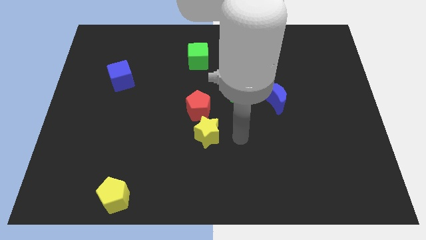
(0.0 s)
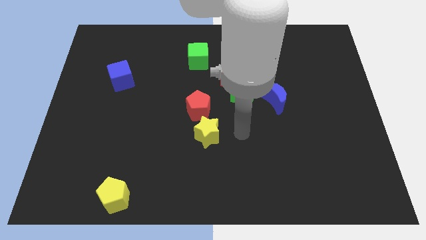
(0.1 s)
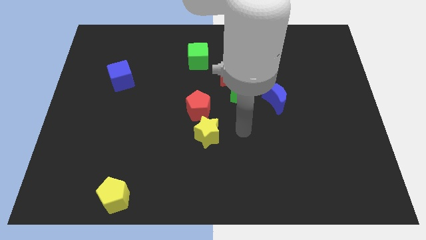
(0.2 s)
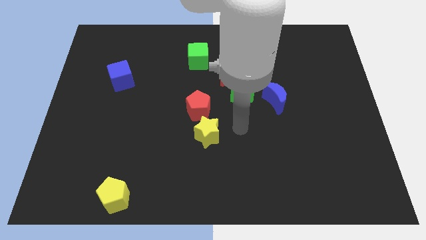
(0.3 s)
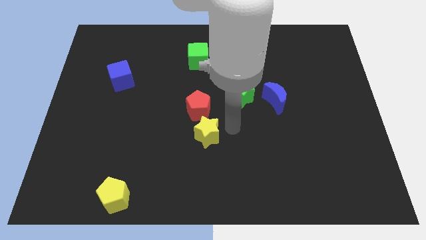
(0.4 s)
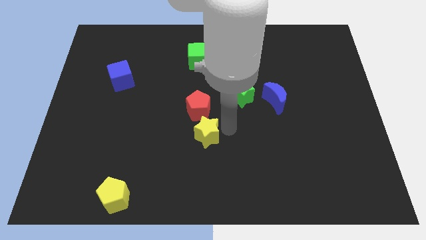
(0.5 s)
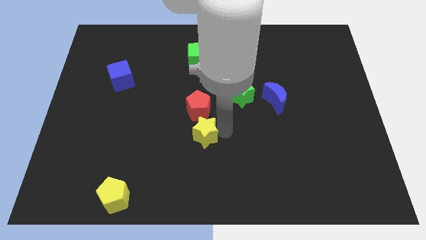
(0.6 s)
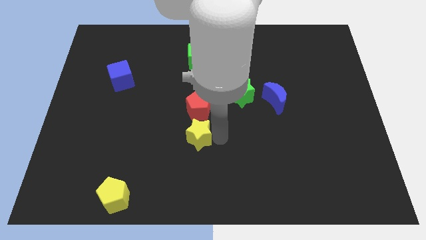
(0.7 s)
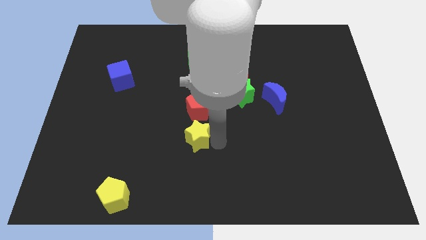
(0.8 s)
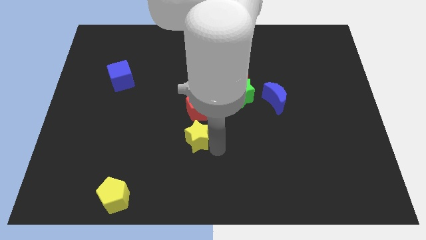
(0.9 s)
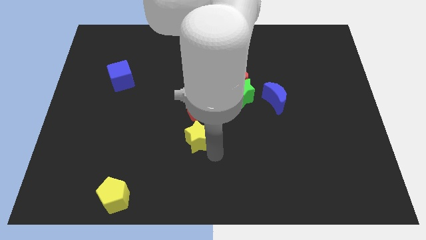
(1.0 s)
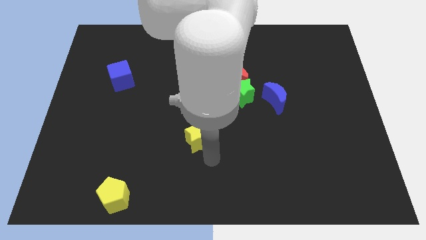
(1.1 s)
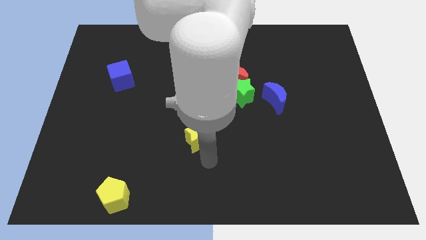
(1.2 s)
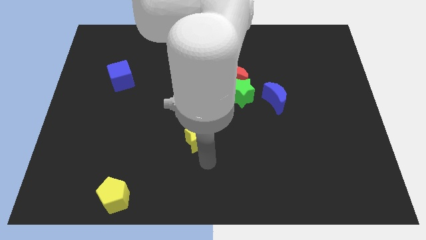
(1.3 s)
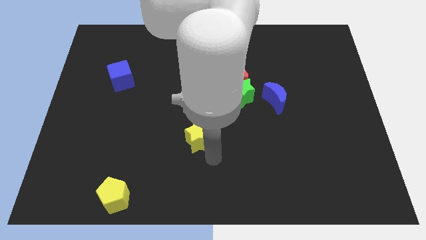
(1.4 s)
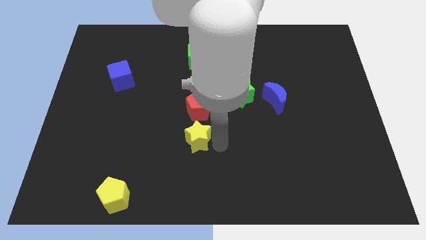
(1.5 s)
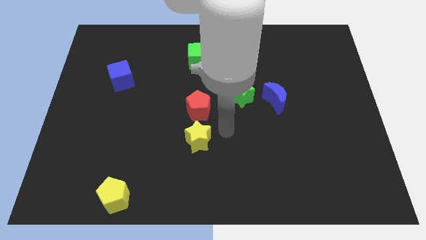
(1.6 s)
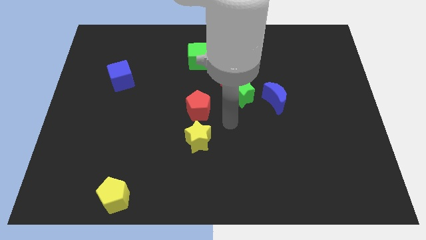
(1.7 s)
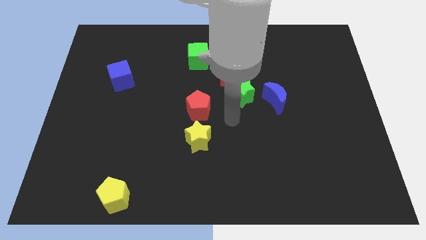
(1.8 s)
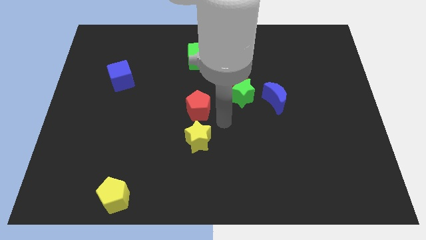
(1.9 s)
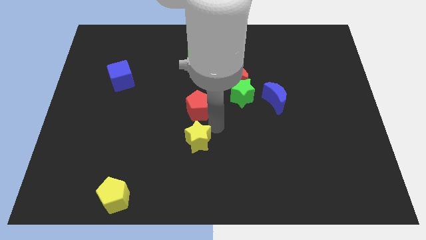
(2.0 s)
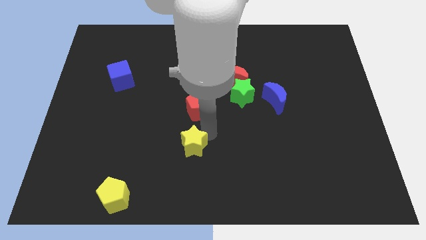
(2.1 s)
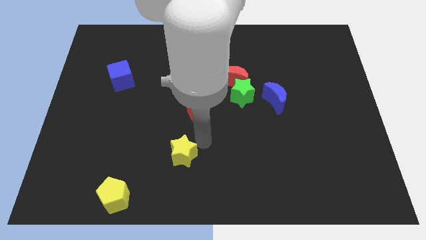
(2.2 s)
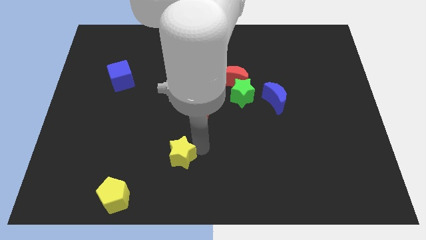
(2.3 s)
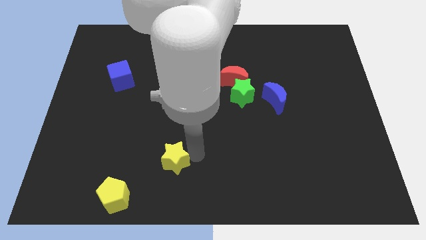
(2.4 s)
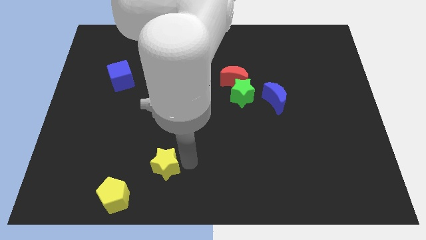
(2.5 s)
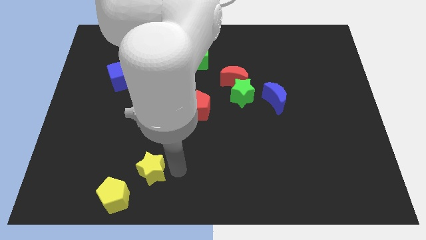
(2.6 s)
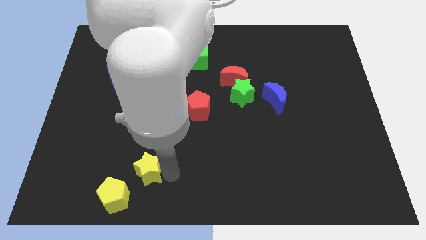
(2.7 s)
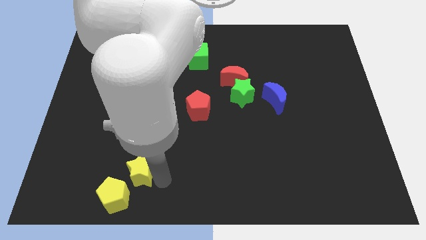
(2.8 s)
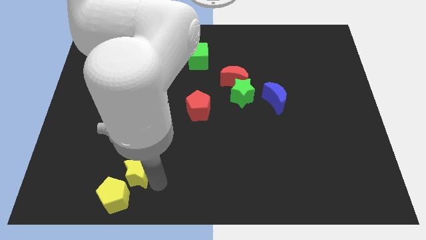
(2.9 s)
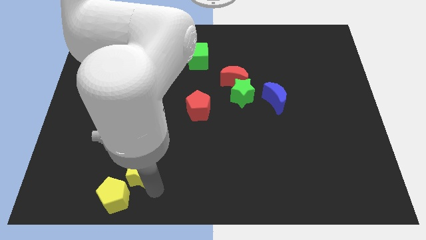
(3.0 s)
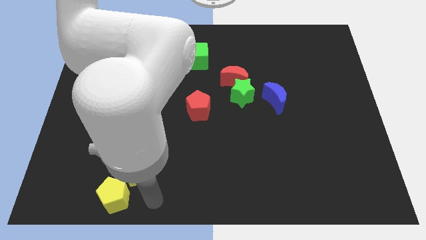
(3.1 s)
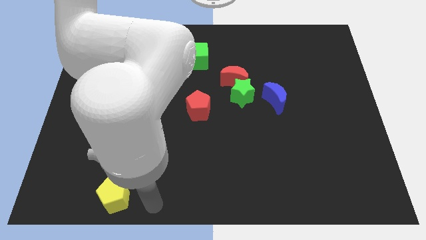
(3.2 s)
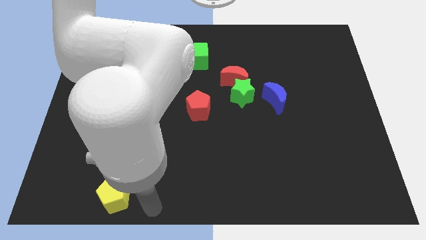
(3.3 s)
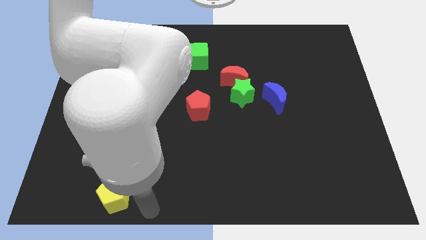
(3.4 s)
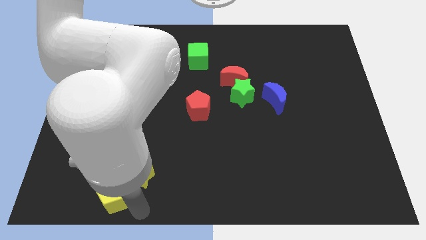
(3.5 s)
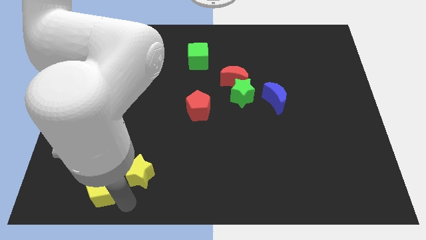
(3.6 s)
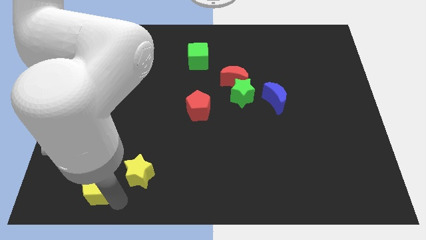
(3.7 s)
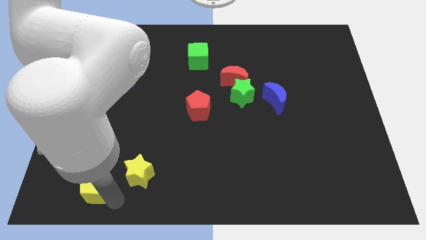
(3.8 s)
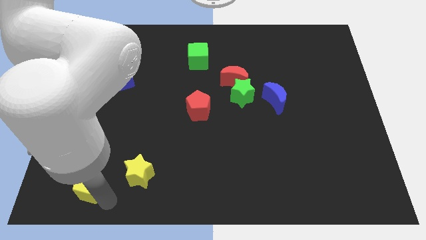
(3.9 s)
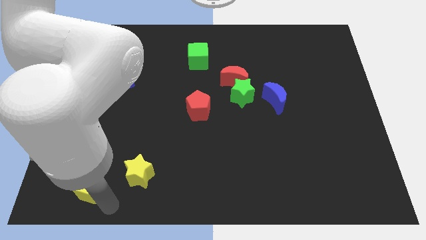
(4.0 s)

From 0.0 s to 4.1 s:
move the yellow star diagonally to the red pentagon

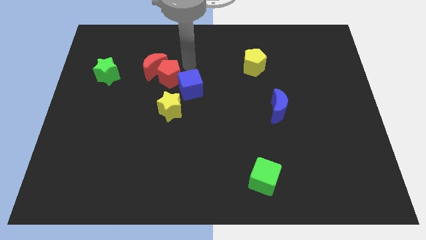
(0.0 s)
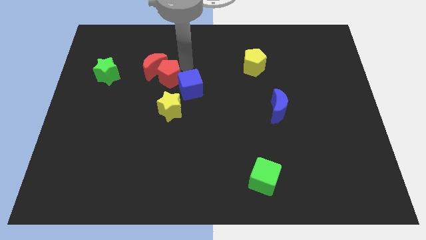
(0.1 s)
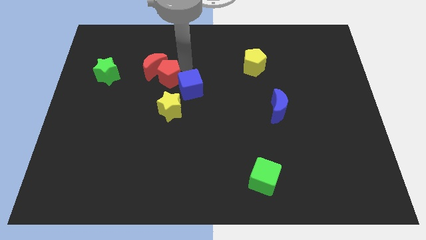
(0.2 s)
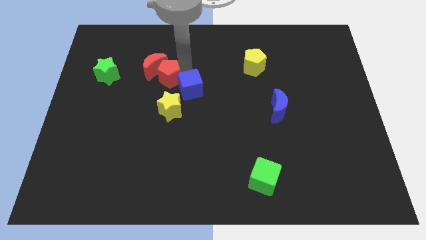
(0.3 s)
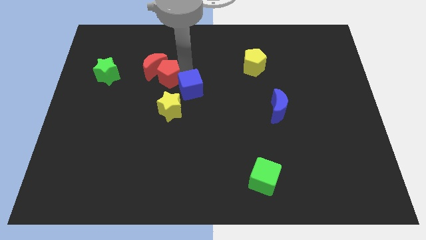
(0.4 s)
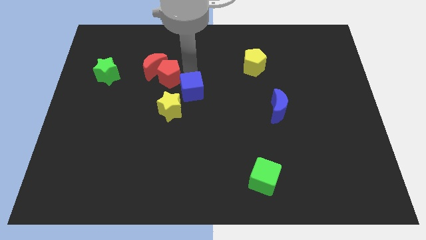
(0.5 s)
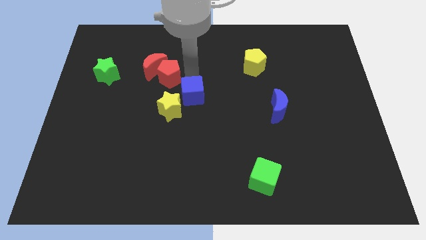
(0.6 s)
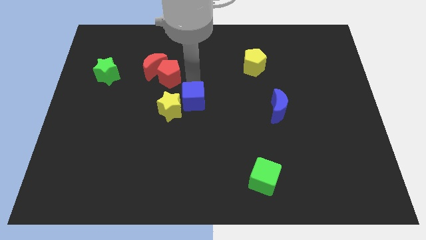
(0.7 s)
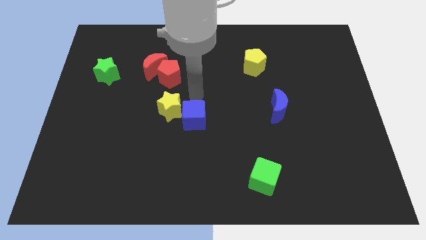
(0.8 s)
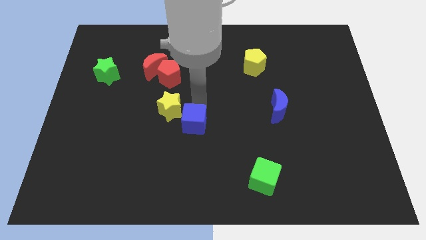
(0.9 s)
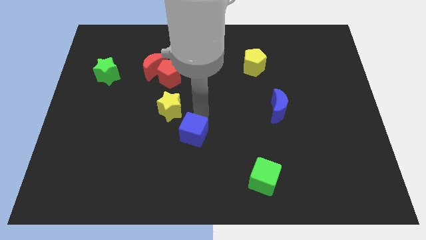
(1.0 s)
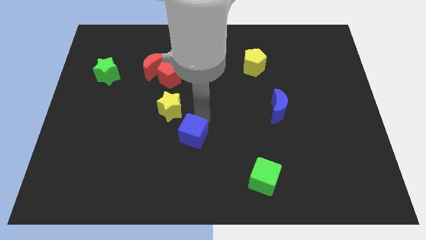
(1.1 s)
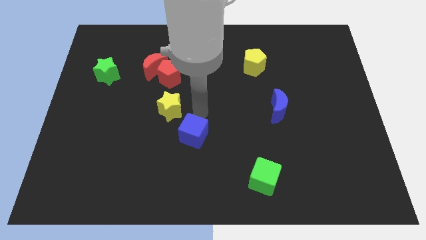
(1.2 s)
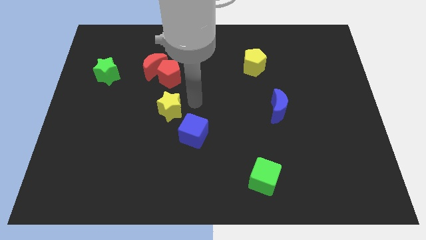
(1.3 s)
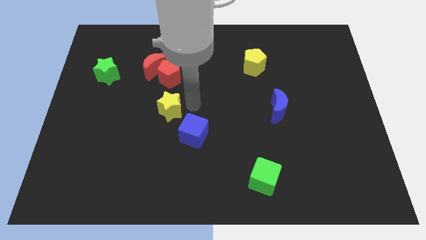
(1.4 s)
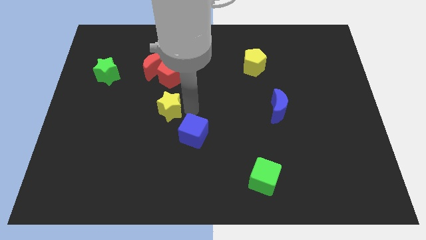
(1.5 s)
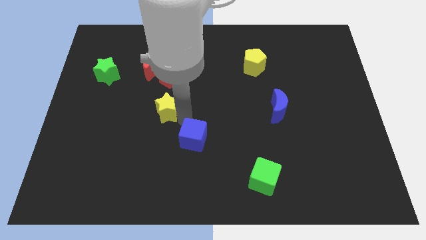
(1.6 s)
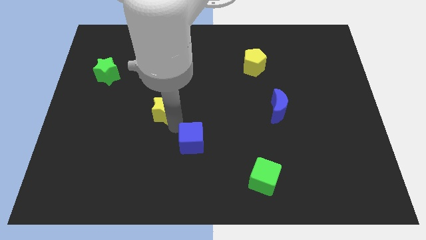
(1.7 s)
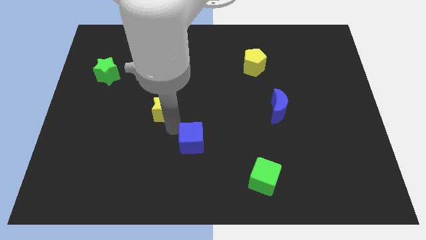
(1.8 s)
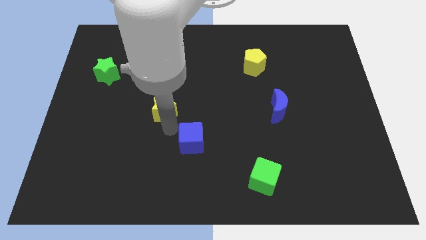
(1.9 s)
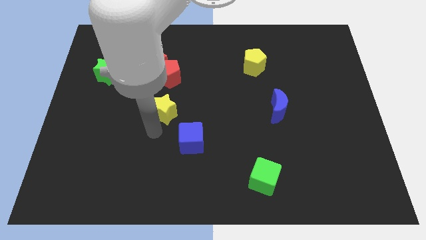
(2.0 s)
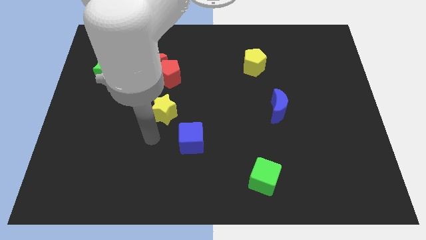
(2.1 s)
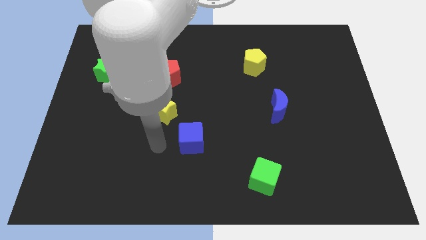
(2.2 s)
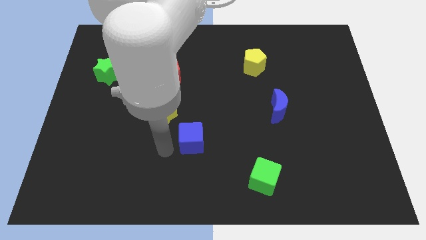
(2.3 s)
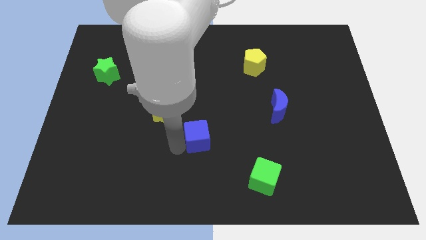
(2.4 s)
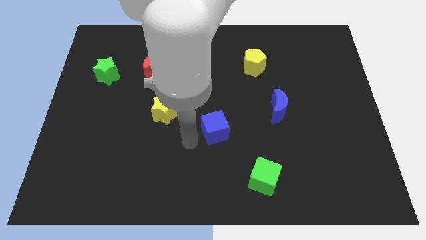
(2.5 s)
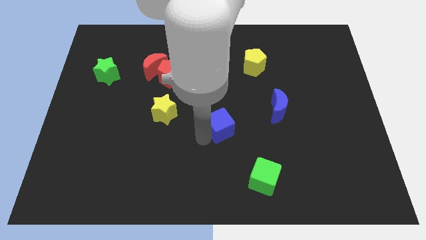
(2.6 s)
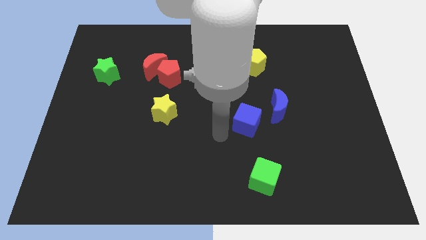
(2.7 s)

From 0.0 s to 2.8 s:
place the blue cube diagonal to the green cube

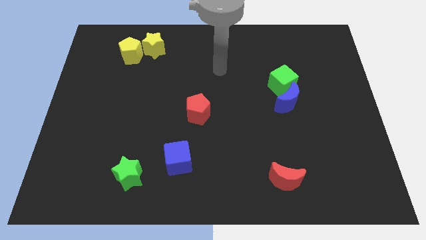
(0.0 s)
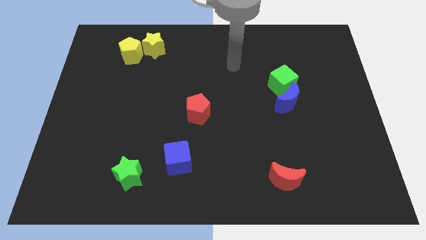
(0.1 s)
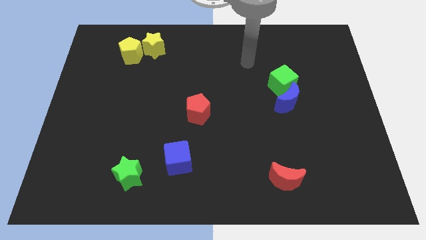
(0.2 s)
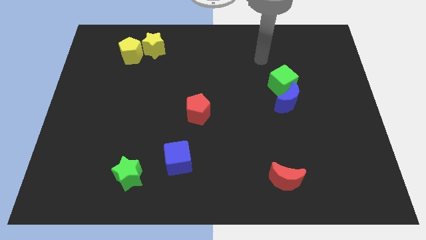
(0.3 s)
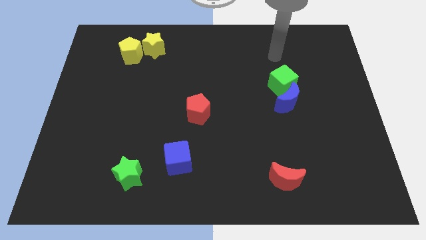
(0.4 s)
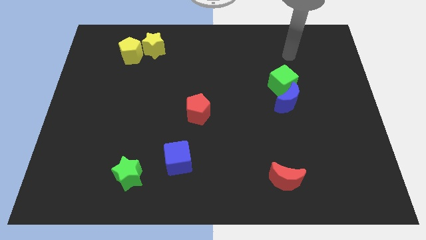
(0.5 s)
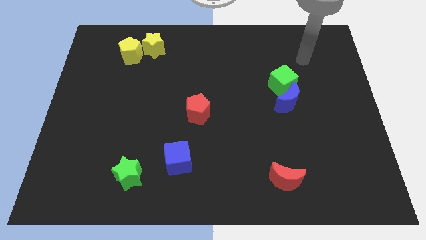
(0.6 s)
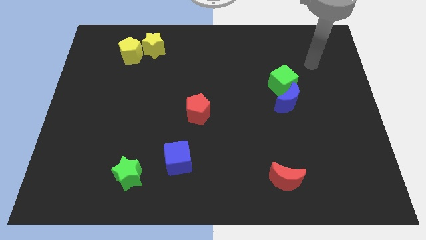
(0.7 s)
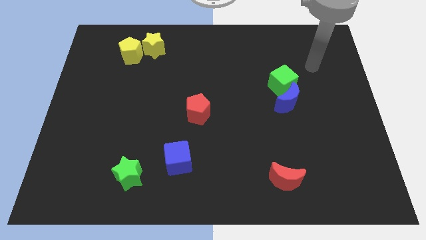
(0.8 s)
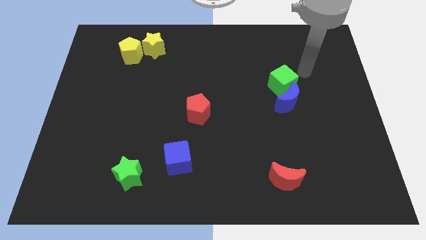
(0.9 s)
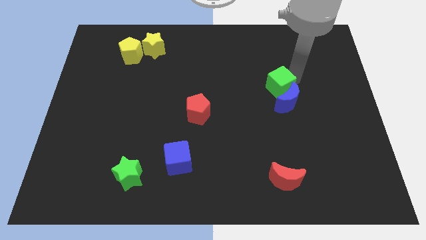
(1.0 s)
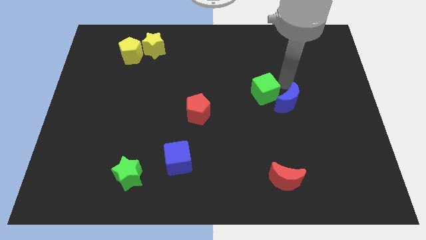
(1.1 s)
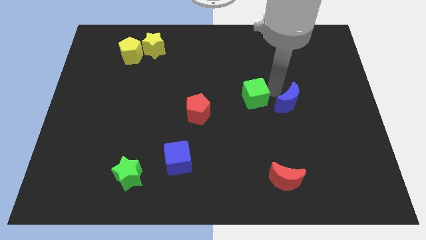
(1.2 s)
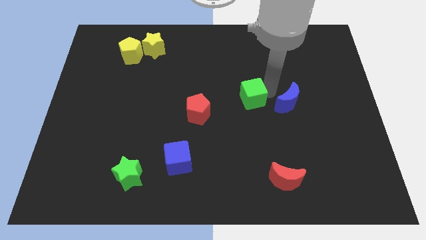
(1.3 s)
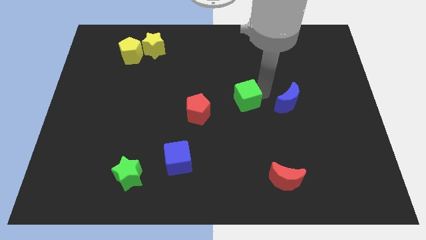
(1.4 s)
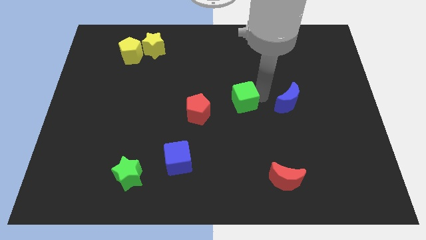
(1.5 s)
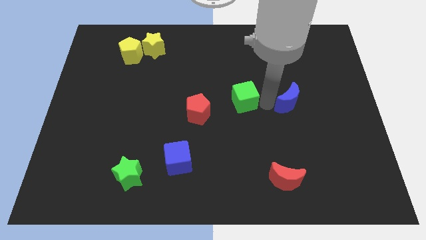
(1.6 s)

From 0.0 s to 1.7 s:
separate the green cube from the blue crescent

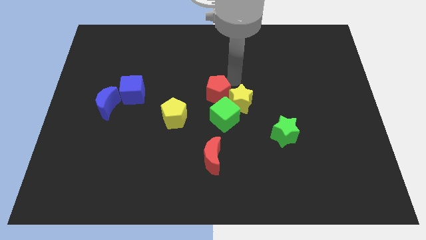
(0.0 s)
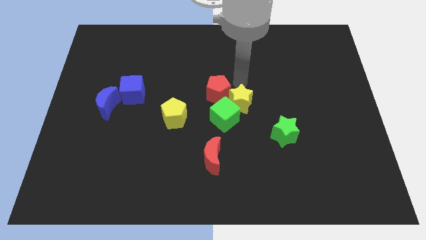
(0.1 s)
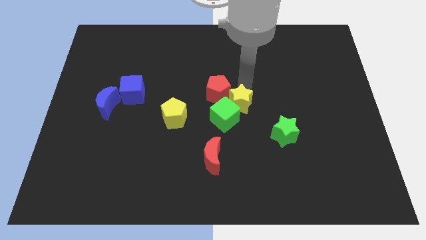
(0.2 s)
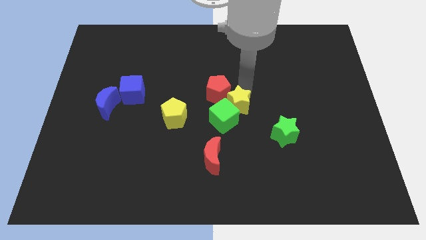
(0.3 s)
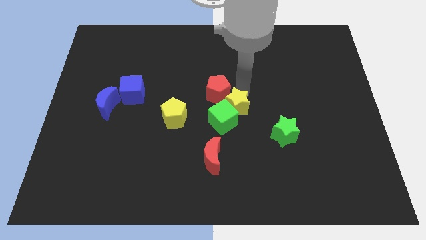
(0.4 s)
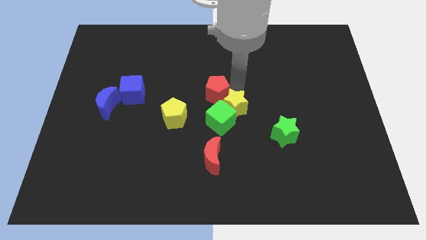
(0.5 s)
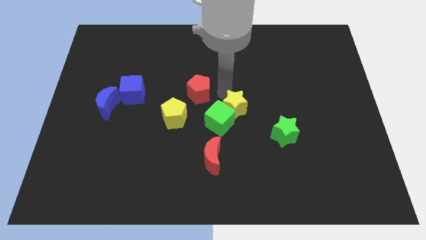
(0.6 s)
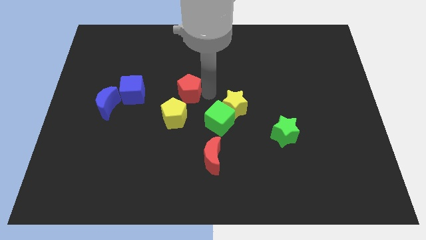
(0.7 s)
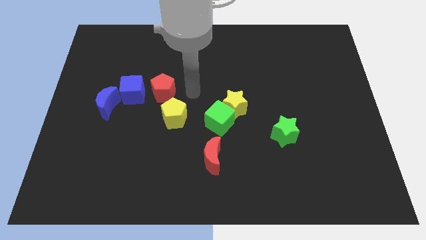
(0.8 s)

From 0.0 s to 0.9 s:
separate red pentagon from yellow star
